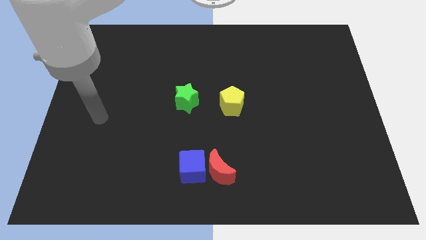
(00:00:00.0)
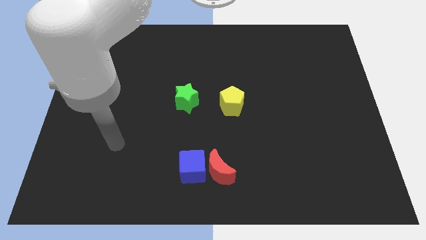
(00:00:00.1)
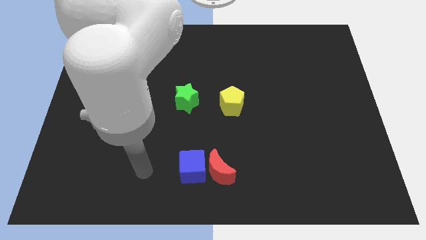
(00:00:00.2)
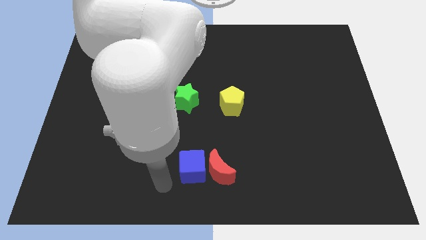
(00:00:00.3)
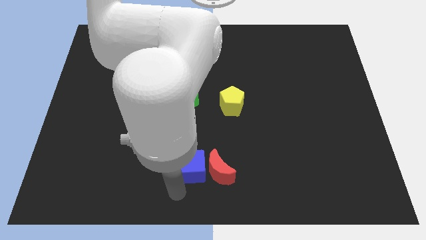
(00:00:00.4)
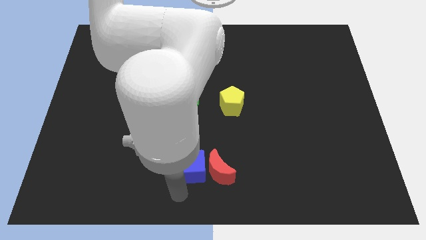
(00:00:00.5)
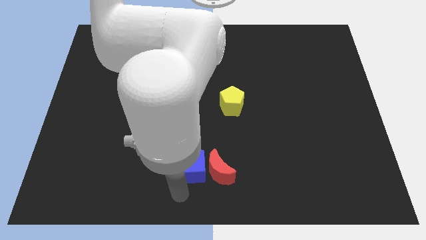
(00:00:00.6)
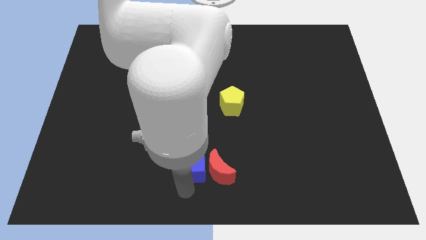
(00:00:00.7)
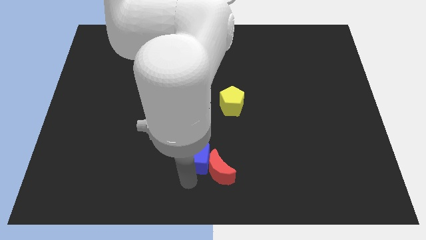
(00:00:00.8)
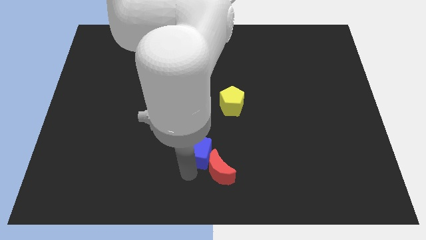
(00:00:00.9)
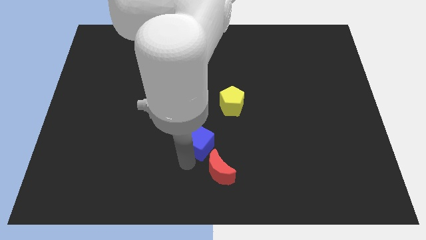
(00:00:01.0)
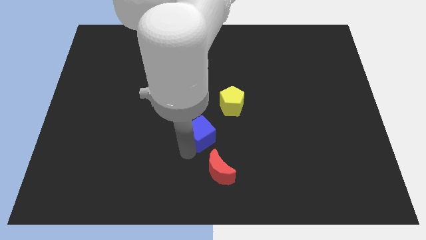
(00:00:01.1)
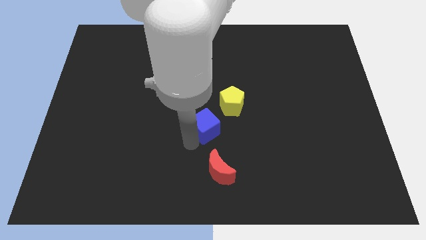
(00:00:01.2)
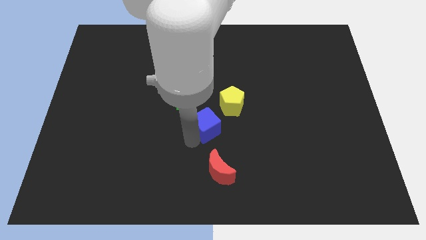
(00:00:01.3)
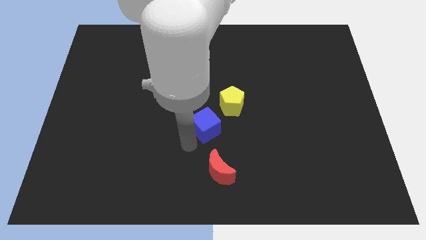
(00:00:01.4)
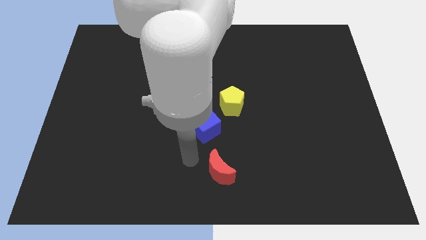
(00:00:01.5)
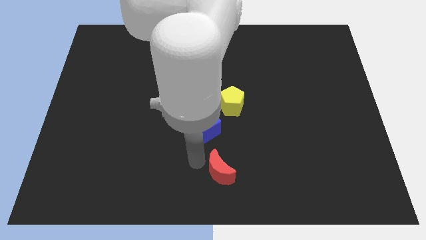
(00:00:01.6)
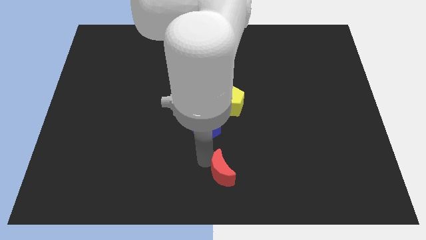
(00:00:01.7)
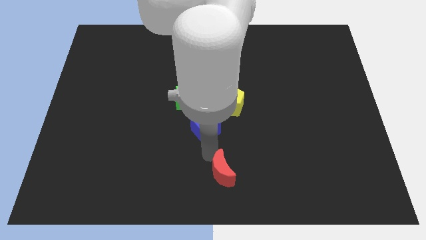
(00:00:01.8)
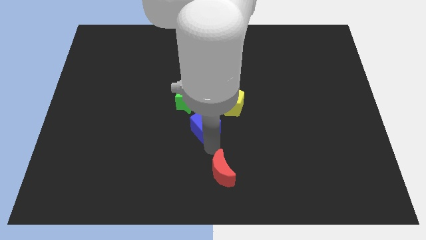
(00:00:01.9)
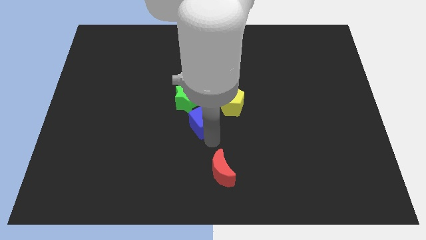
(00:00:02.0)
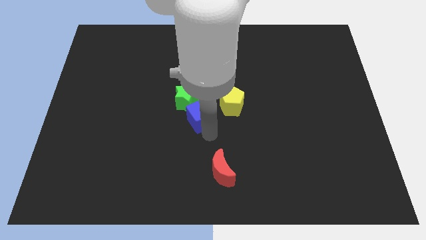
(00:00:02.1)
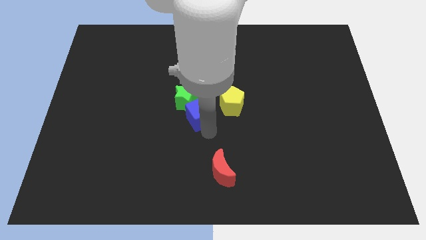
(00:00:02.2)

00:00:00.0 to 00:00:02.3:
slide the blue block towards the star

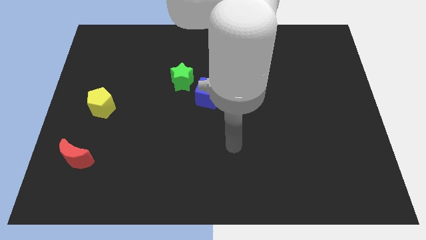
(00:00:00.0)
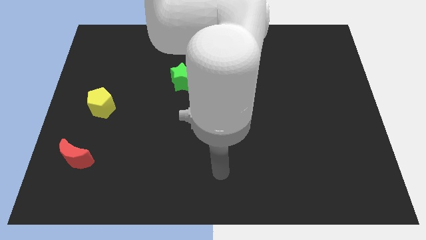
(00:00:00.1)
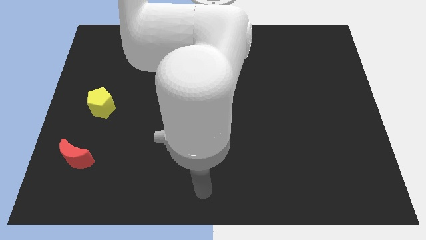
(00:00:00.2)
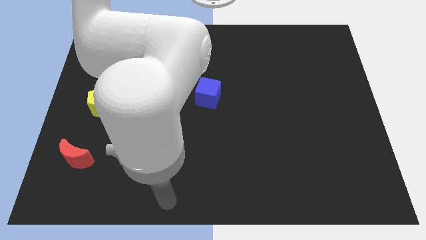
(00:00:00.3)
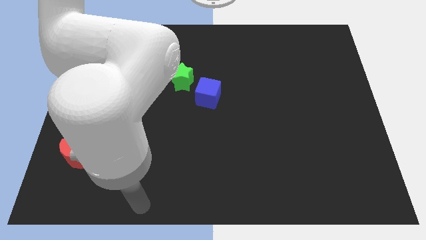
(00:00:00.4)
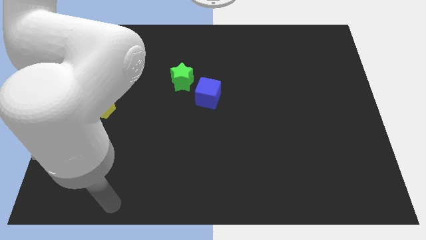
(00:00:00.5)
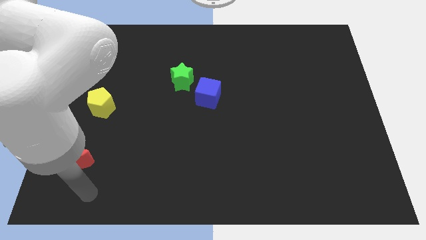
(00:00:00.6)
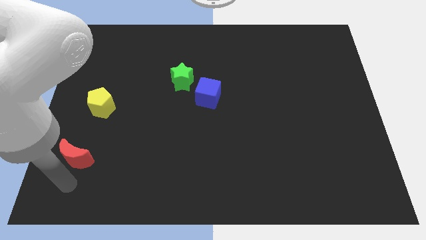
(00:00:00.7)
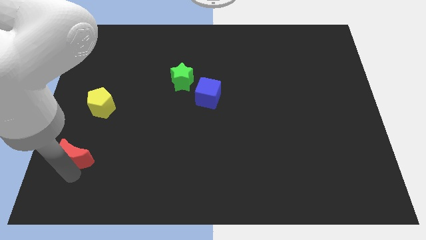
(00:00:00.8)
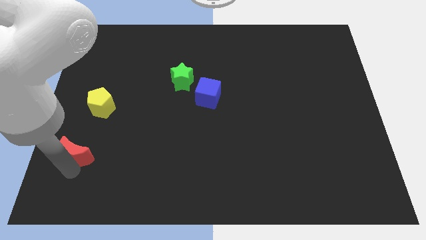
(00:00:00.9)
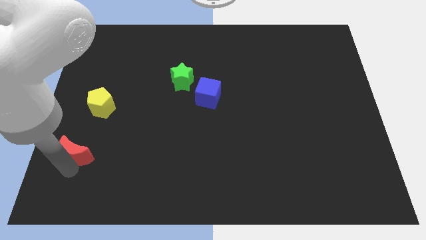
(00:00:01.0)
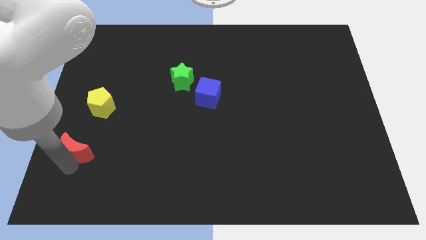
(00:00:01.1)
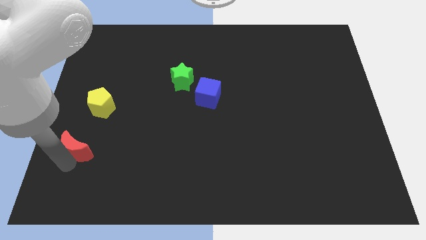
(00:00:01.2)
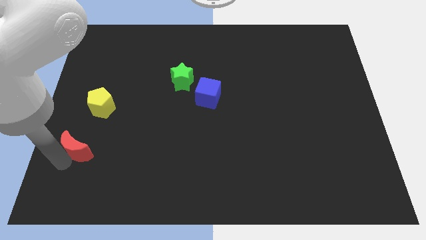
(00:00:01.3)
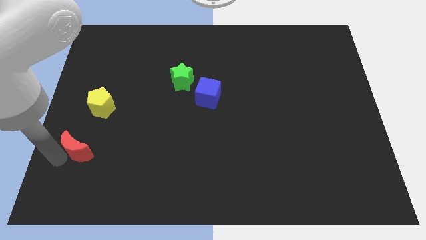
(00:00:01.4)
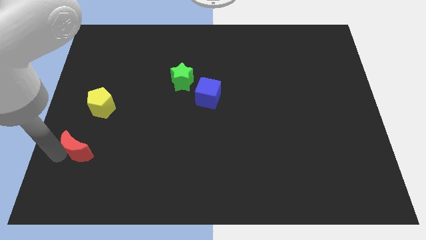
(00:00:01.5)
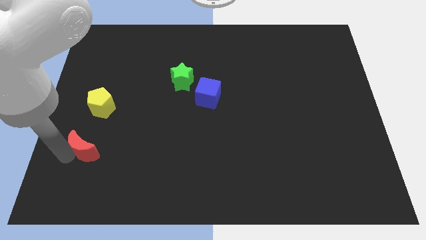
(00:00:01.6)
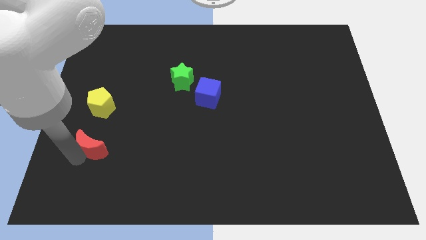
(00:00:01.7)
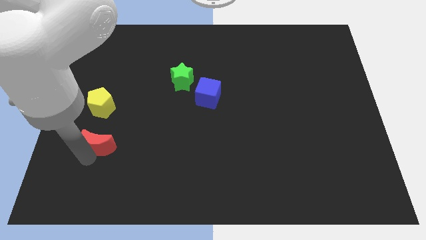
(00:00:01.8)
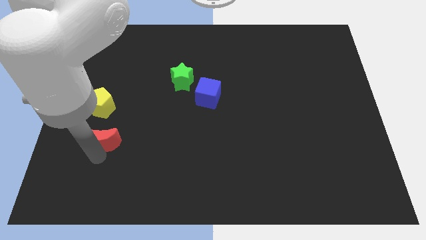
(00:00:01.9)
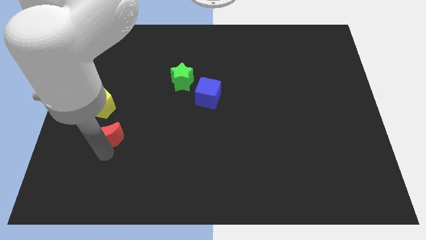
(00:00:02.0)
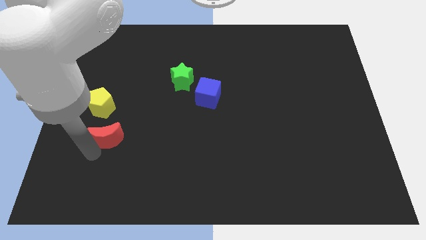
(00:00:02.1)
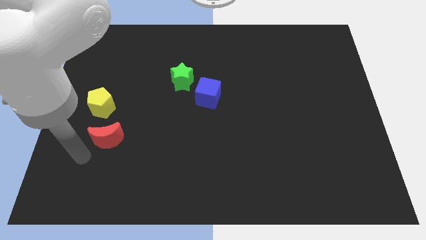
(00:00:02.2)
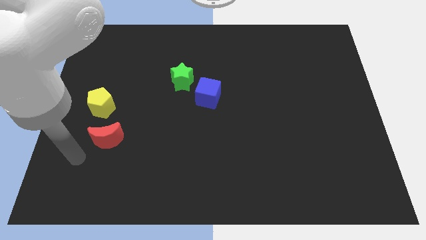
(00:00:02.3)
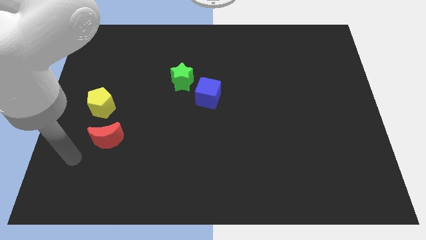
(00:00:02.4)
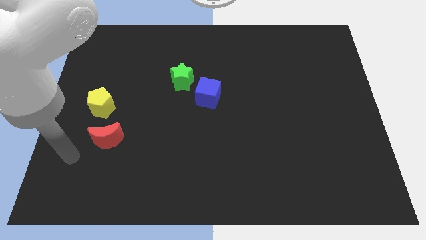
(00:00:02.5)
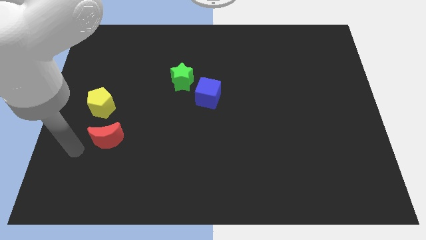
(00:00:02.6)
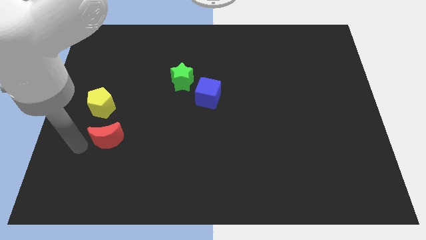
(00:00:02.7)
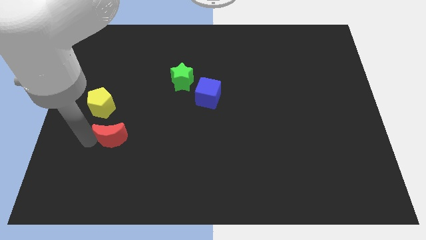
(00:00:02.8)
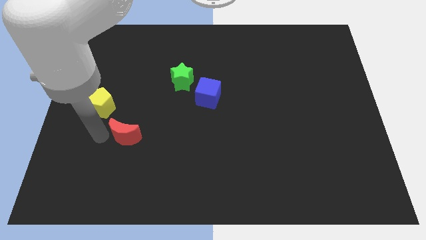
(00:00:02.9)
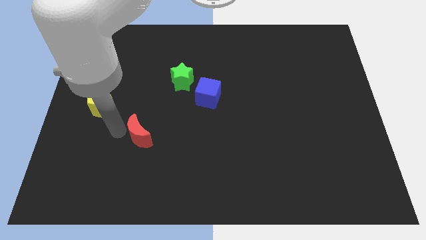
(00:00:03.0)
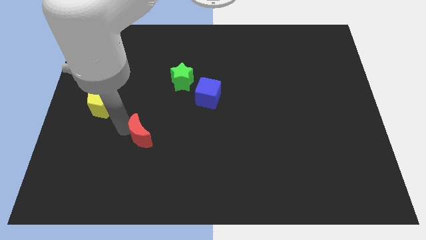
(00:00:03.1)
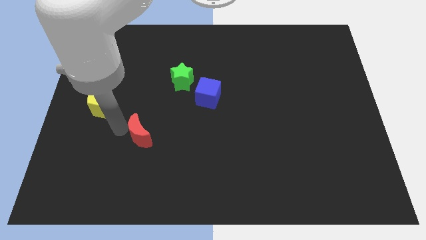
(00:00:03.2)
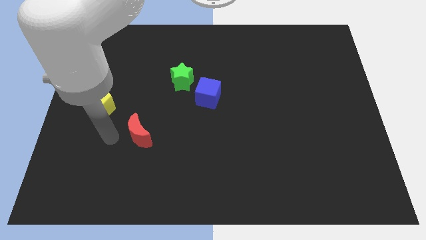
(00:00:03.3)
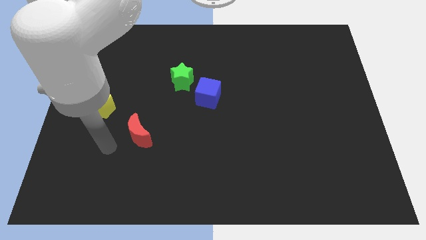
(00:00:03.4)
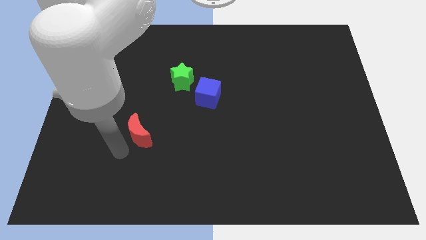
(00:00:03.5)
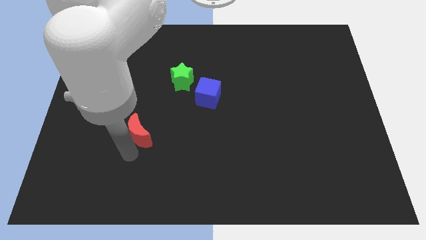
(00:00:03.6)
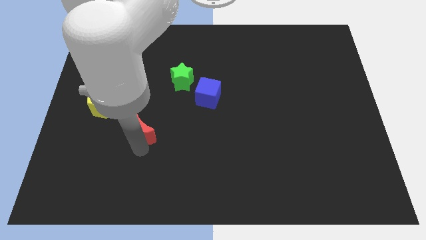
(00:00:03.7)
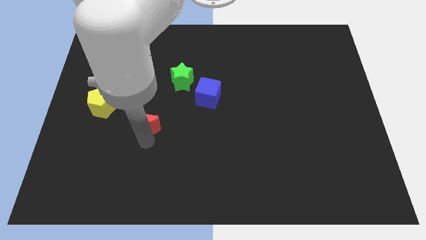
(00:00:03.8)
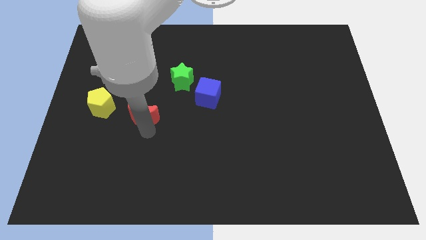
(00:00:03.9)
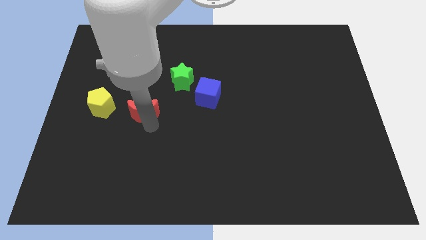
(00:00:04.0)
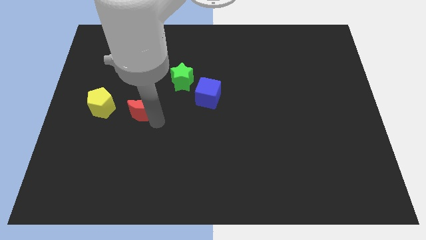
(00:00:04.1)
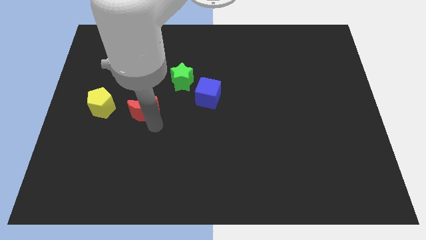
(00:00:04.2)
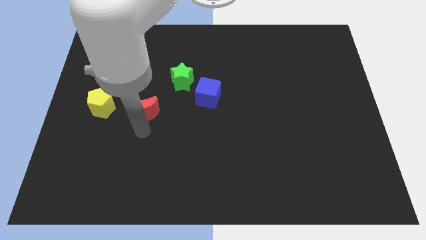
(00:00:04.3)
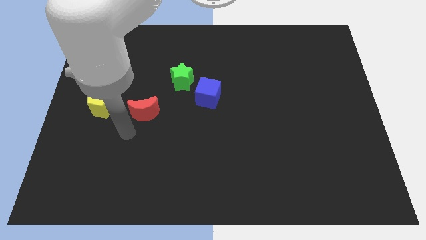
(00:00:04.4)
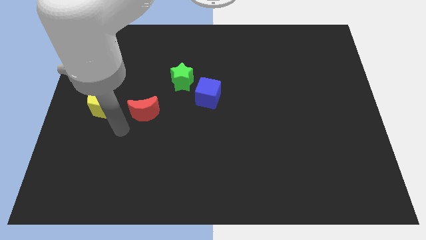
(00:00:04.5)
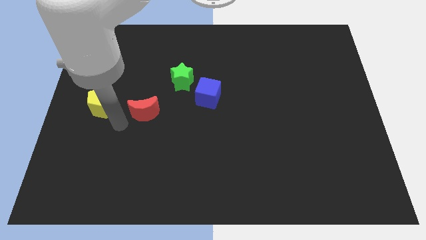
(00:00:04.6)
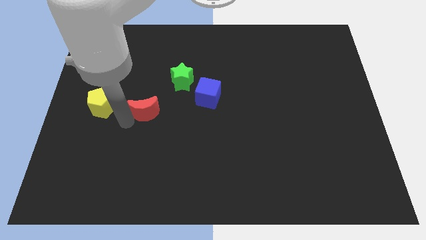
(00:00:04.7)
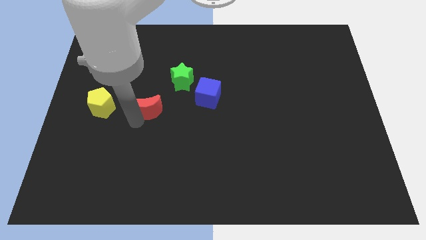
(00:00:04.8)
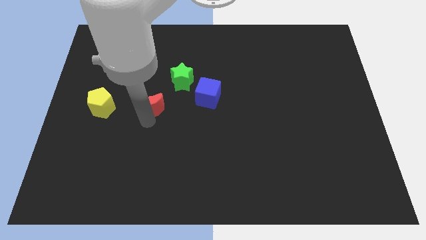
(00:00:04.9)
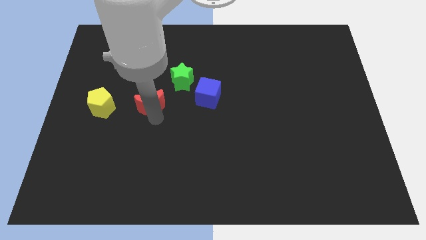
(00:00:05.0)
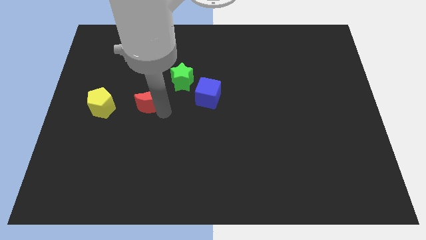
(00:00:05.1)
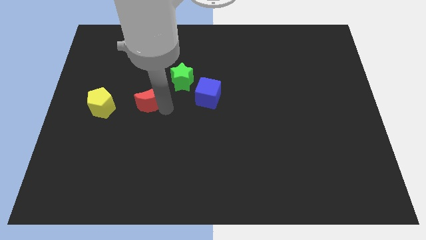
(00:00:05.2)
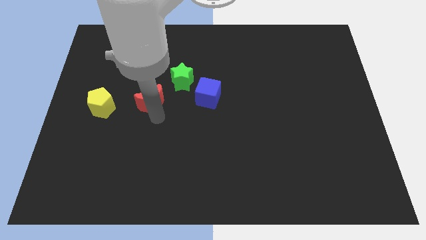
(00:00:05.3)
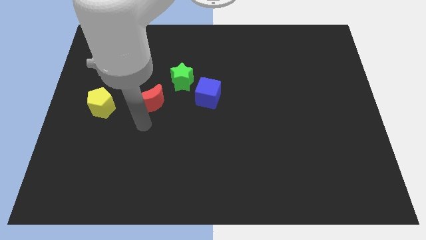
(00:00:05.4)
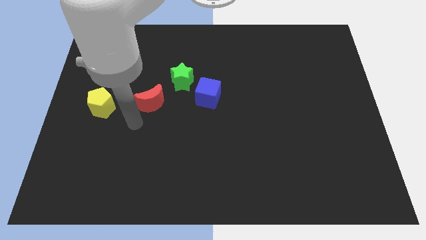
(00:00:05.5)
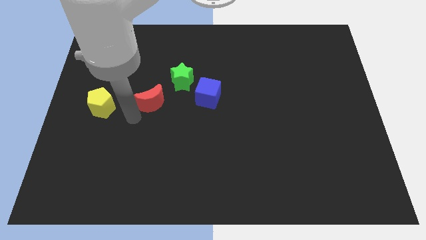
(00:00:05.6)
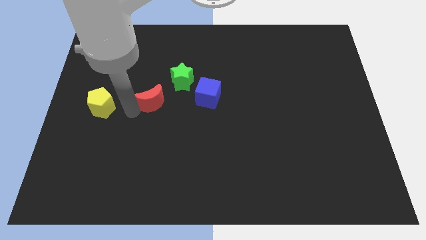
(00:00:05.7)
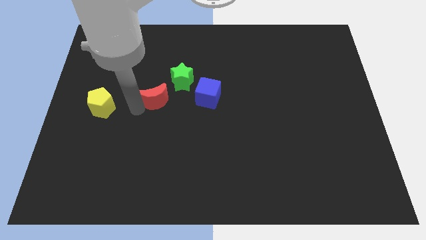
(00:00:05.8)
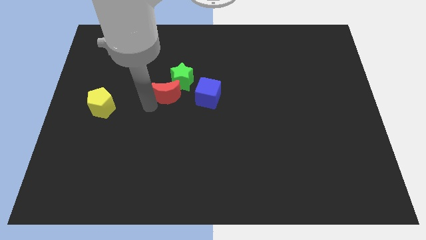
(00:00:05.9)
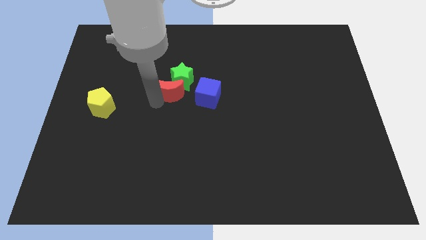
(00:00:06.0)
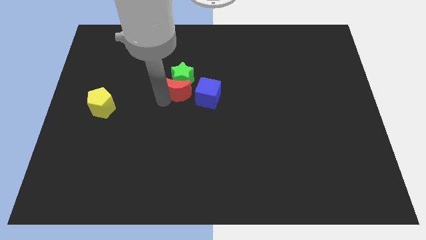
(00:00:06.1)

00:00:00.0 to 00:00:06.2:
push the green block next to the red block
